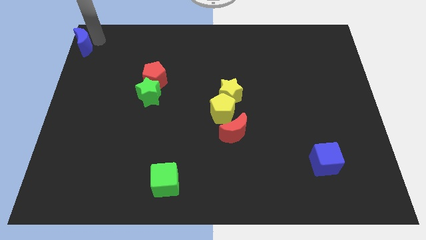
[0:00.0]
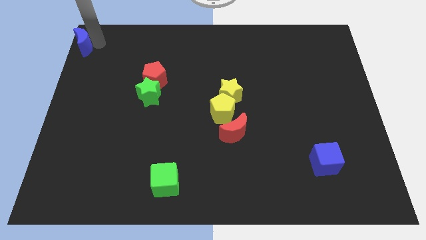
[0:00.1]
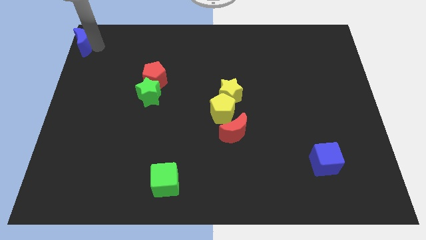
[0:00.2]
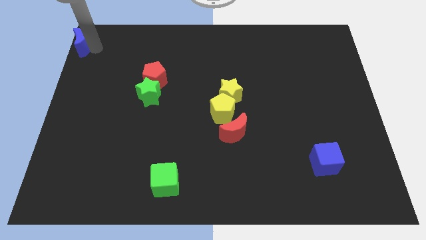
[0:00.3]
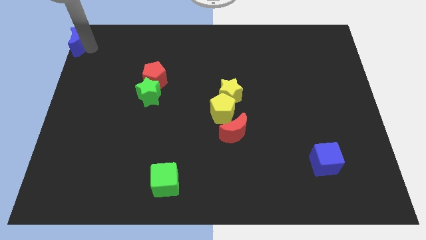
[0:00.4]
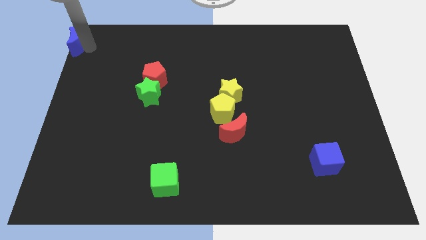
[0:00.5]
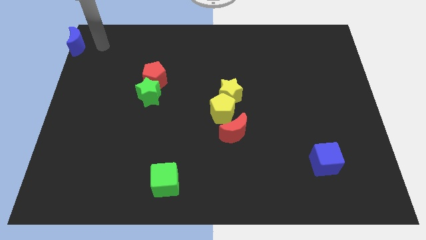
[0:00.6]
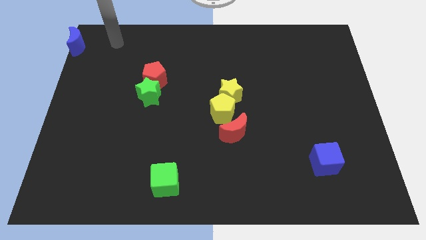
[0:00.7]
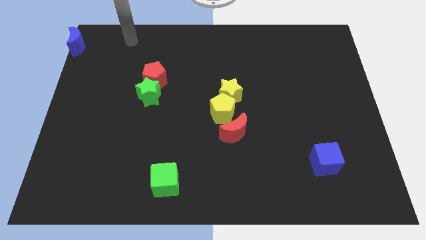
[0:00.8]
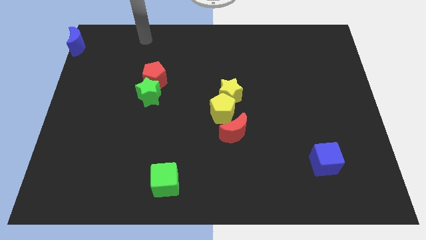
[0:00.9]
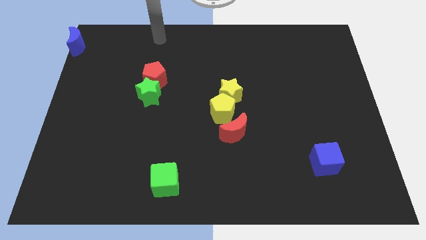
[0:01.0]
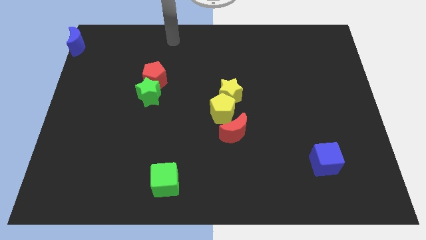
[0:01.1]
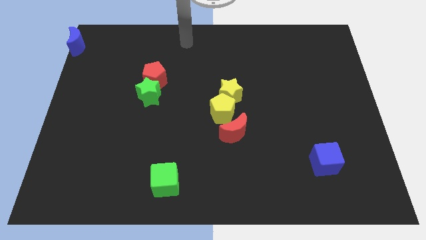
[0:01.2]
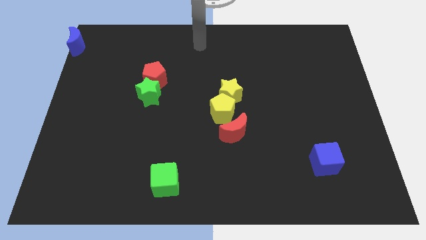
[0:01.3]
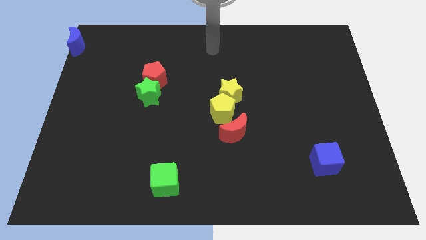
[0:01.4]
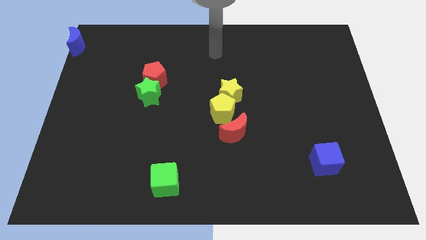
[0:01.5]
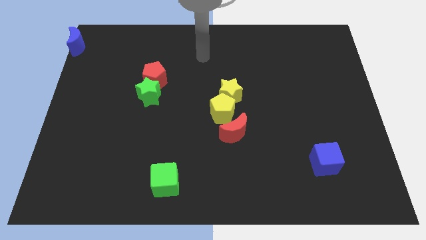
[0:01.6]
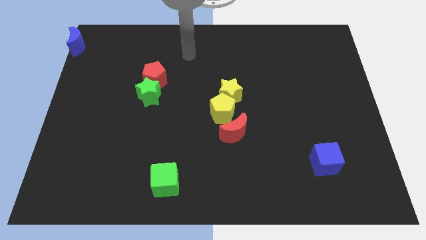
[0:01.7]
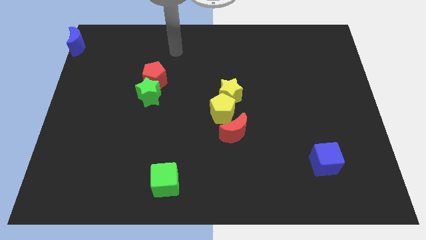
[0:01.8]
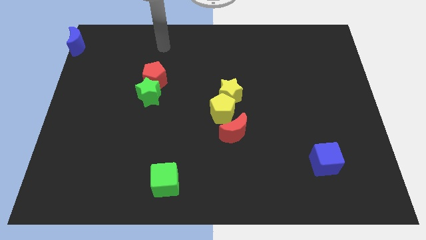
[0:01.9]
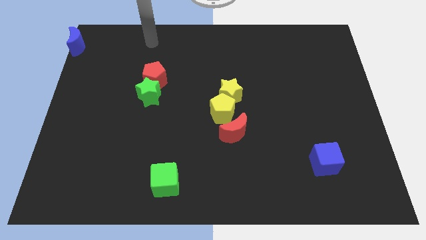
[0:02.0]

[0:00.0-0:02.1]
move the arm at the top of the red pentagon

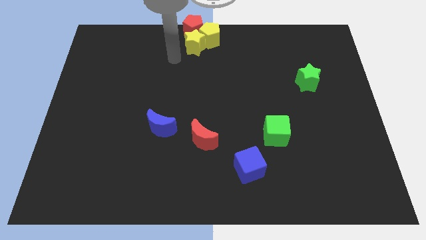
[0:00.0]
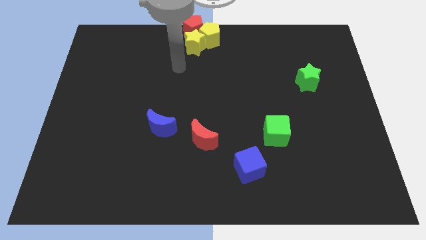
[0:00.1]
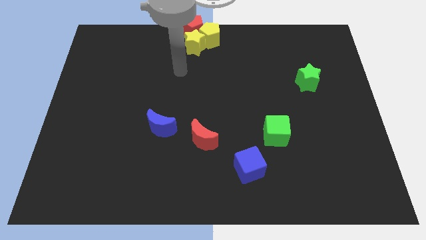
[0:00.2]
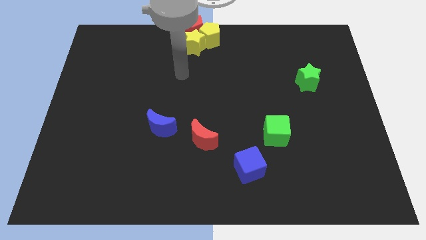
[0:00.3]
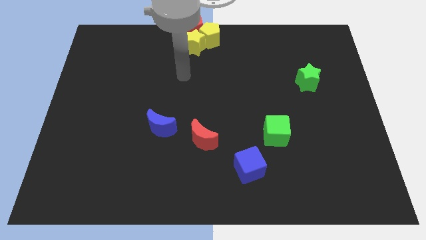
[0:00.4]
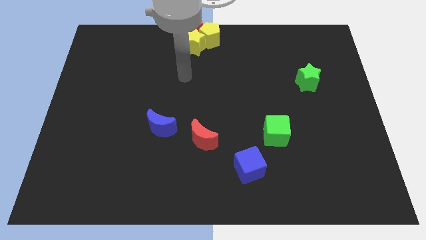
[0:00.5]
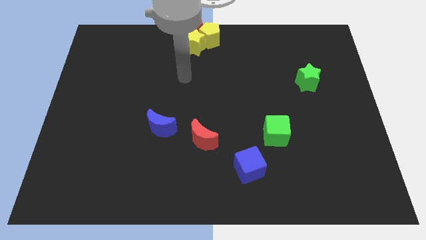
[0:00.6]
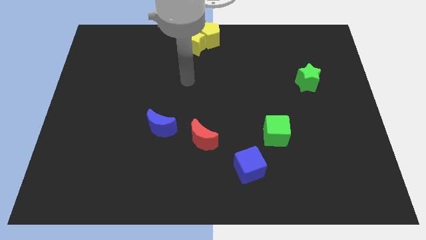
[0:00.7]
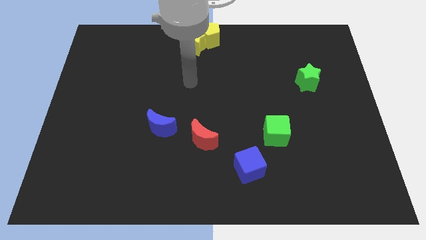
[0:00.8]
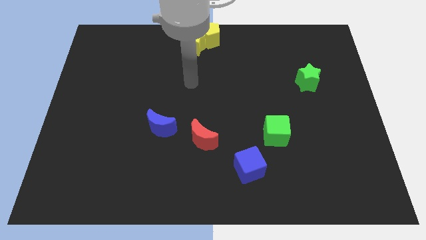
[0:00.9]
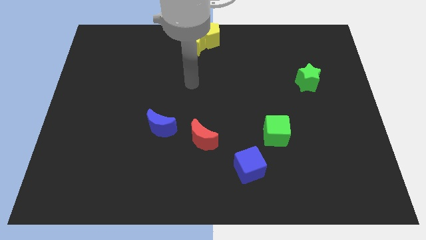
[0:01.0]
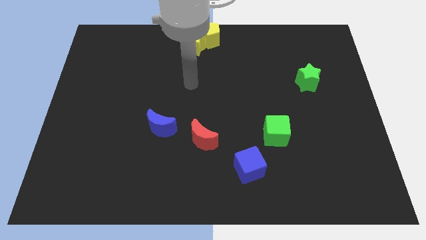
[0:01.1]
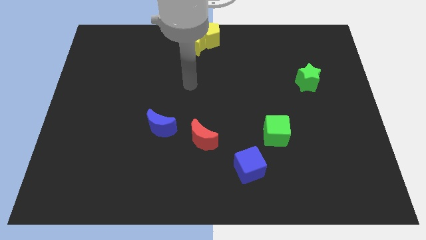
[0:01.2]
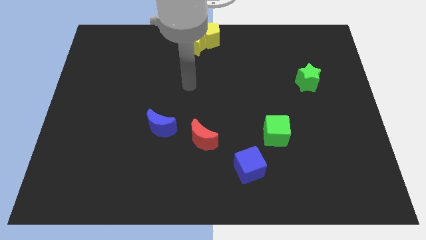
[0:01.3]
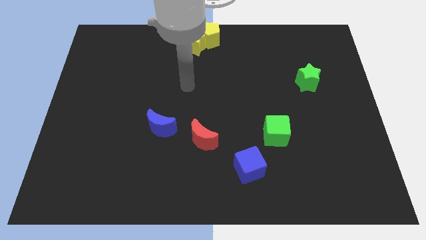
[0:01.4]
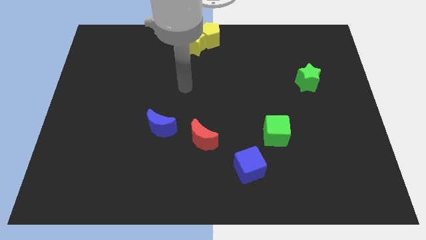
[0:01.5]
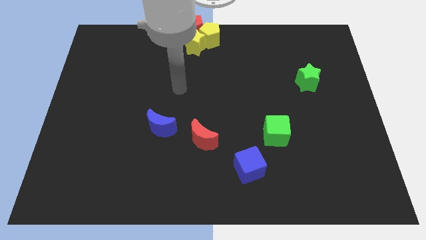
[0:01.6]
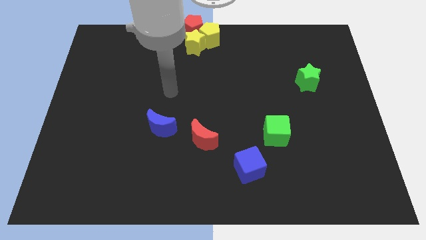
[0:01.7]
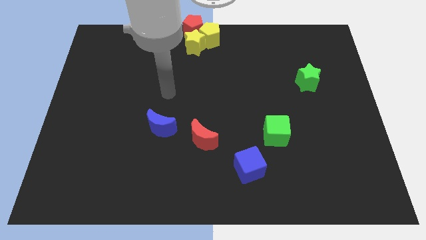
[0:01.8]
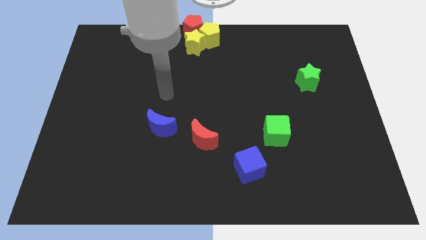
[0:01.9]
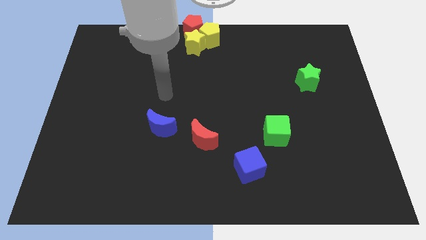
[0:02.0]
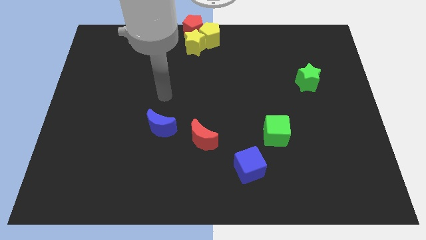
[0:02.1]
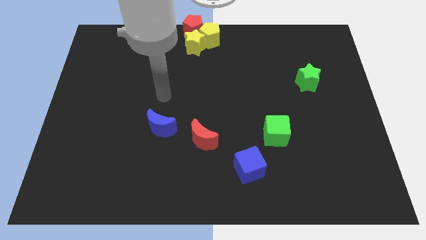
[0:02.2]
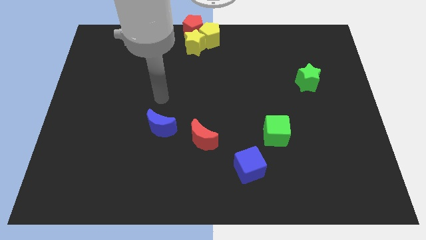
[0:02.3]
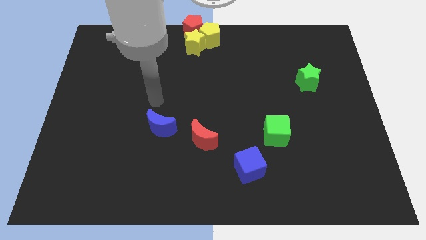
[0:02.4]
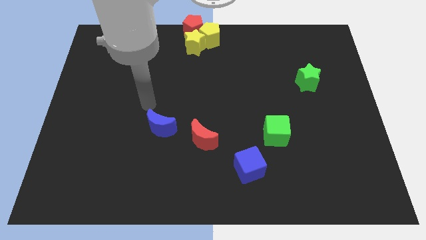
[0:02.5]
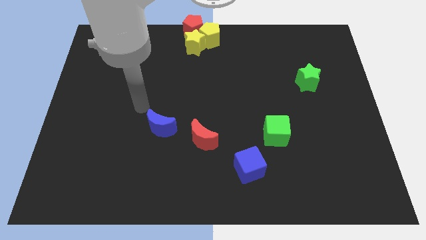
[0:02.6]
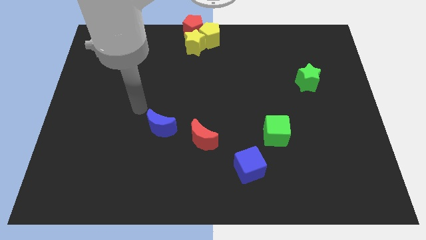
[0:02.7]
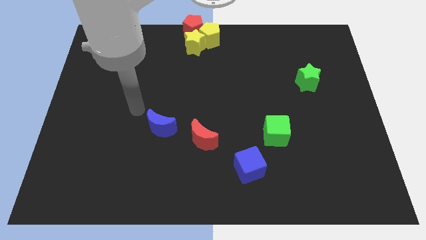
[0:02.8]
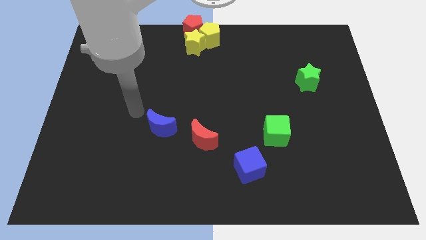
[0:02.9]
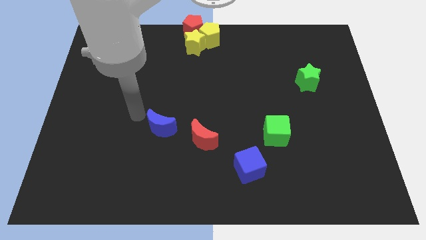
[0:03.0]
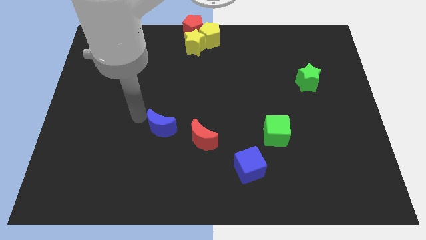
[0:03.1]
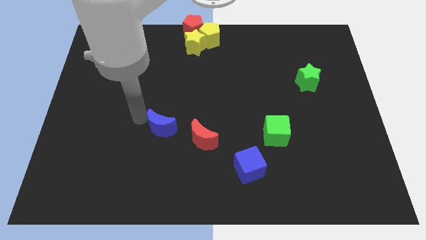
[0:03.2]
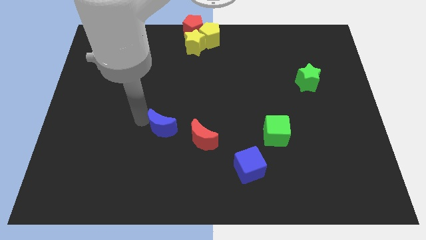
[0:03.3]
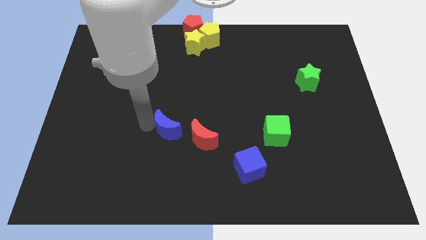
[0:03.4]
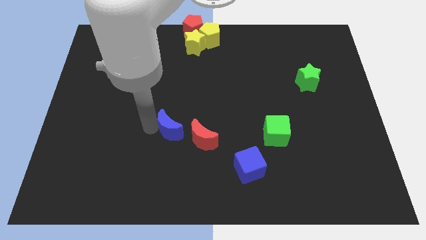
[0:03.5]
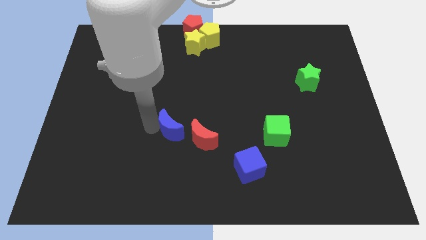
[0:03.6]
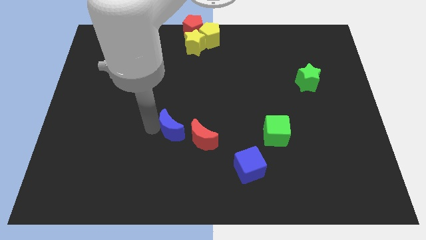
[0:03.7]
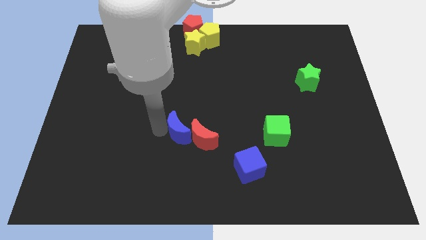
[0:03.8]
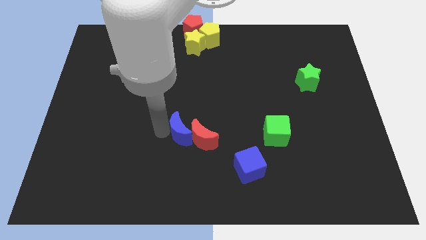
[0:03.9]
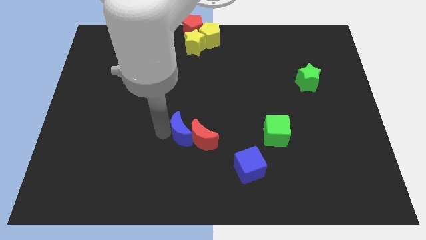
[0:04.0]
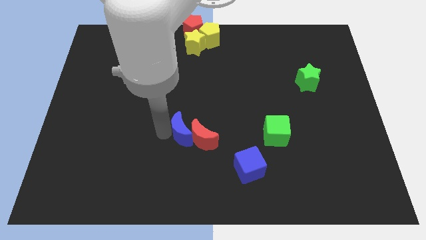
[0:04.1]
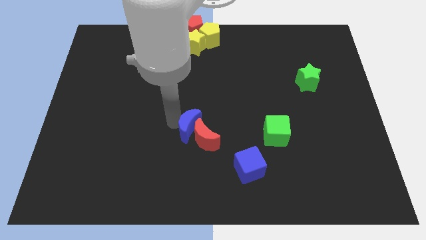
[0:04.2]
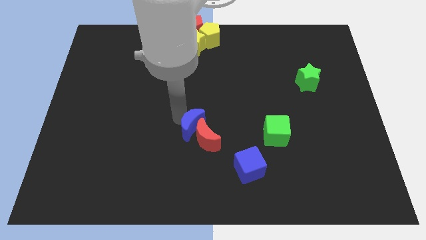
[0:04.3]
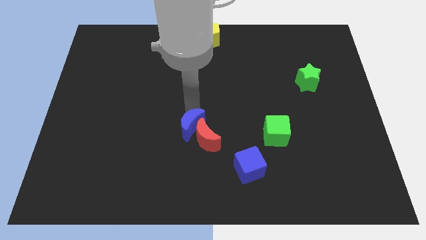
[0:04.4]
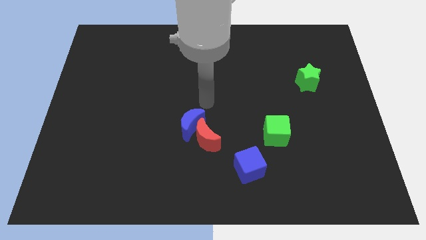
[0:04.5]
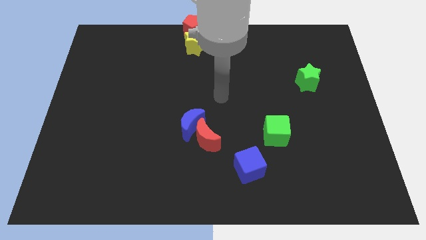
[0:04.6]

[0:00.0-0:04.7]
push the blue moon into the red moon

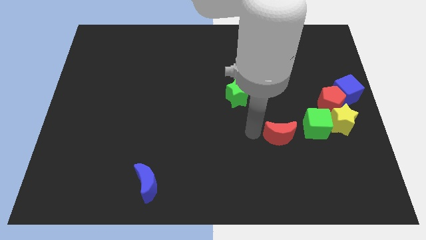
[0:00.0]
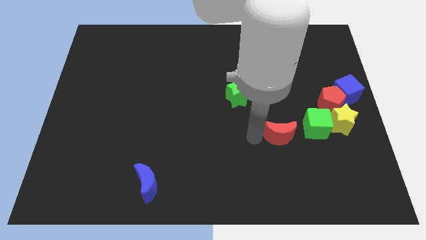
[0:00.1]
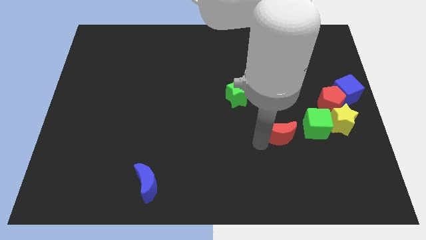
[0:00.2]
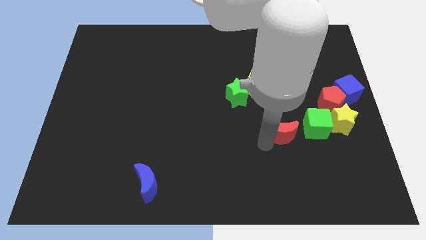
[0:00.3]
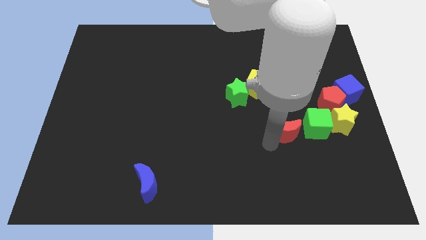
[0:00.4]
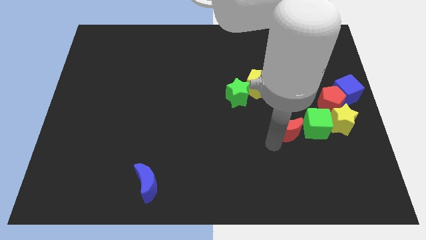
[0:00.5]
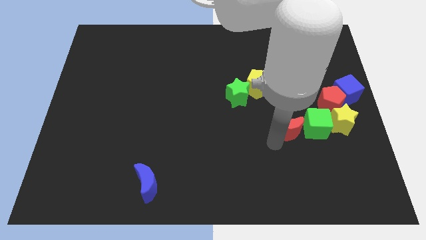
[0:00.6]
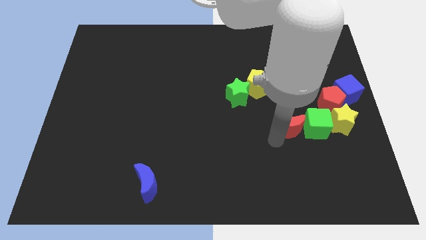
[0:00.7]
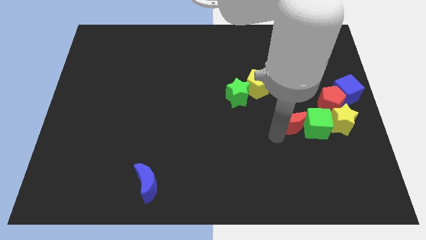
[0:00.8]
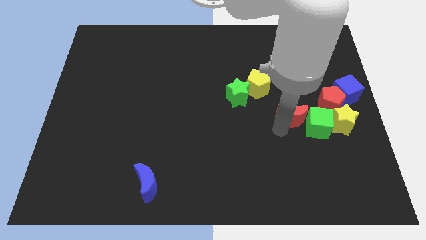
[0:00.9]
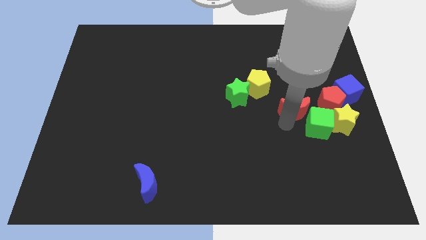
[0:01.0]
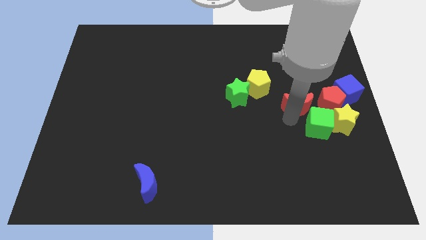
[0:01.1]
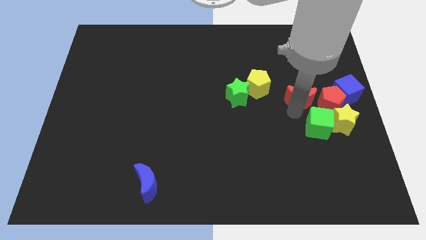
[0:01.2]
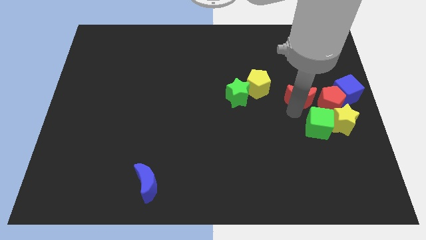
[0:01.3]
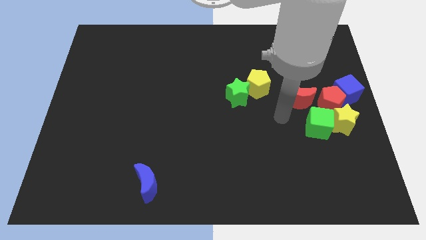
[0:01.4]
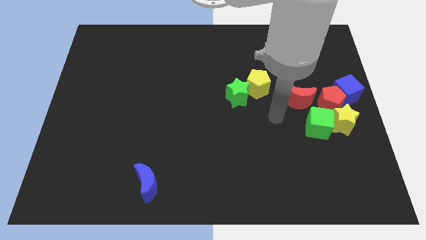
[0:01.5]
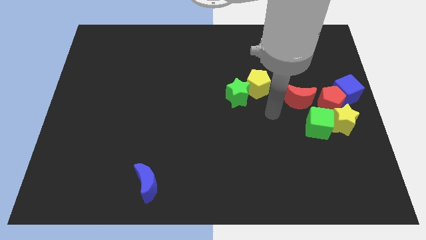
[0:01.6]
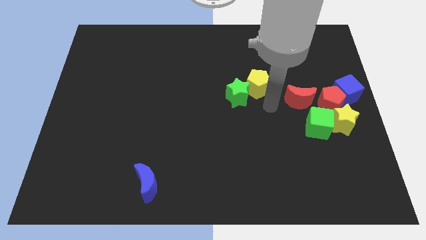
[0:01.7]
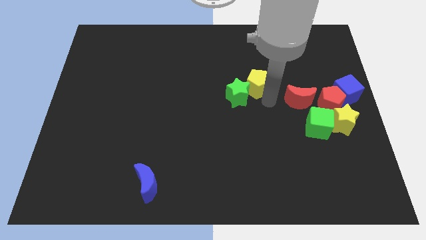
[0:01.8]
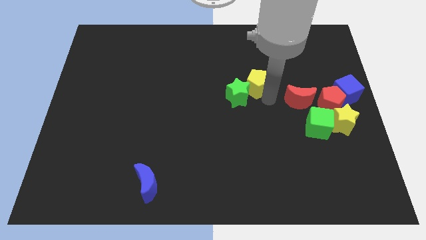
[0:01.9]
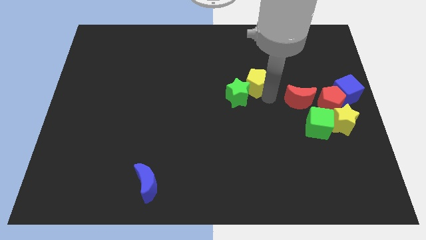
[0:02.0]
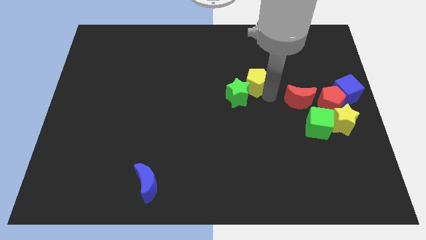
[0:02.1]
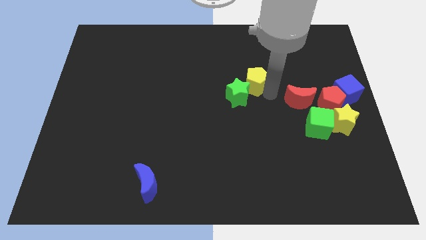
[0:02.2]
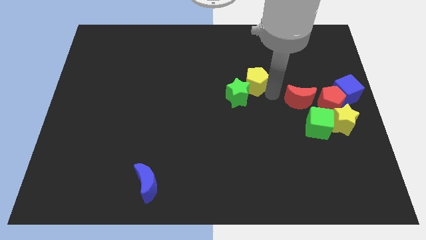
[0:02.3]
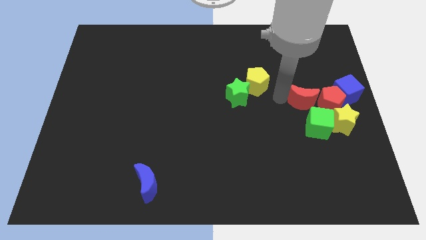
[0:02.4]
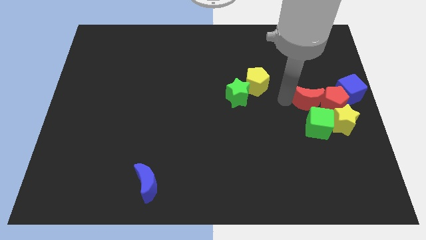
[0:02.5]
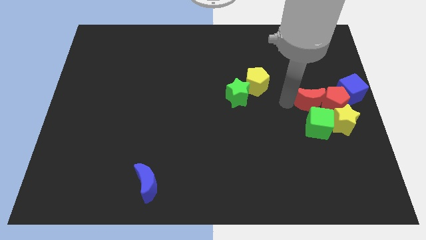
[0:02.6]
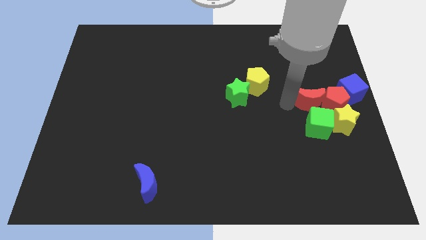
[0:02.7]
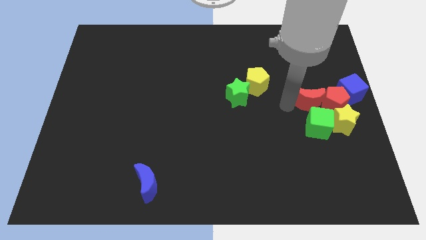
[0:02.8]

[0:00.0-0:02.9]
move the red moon into red pentagon
